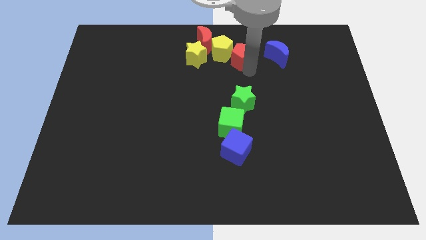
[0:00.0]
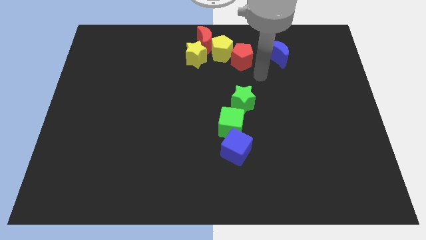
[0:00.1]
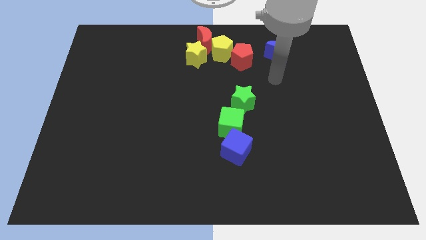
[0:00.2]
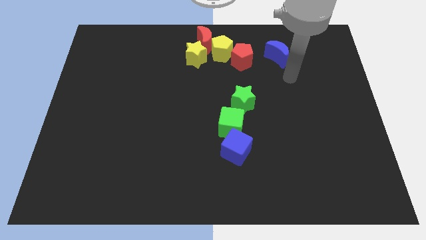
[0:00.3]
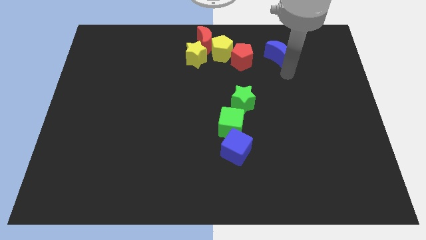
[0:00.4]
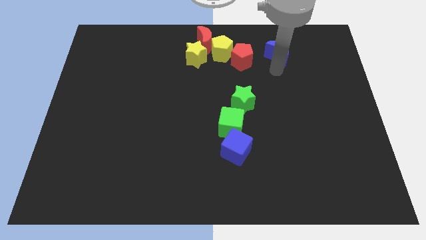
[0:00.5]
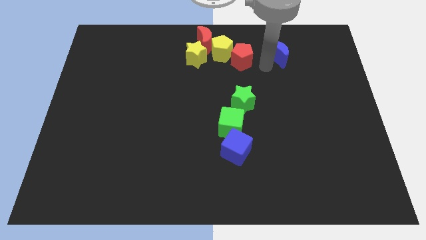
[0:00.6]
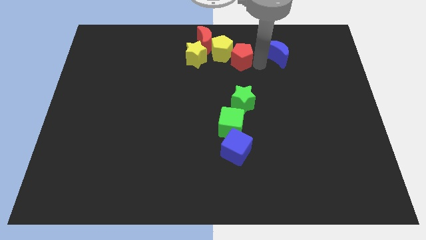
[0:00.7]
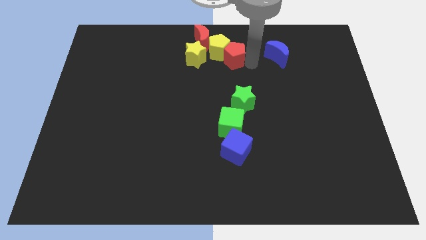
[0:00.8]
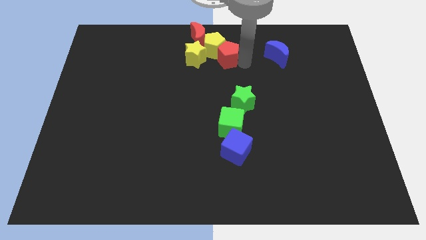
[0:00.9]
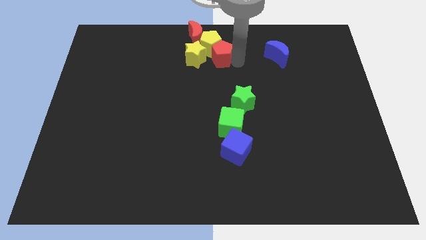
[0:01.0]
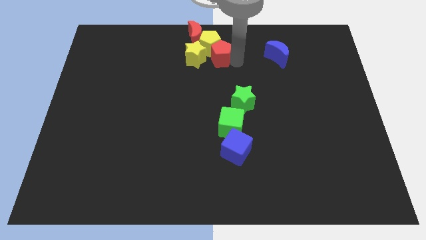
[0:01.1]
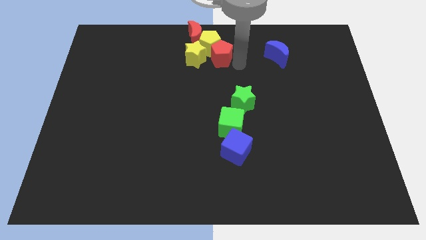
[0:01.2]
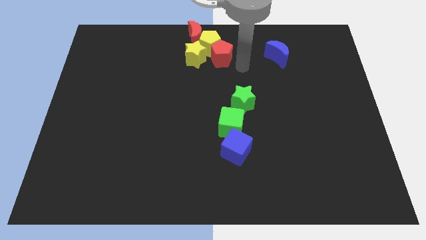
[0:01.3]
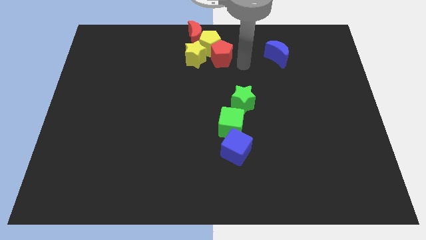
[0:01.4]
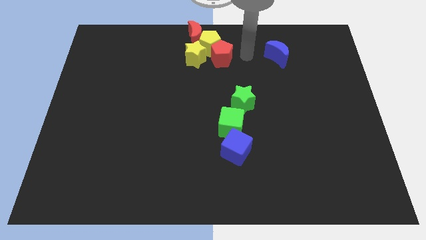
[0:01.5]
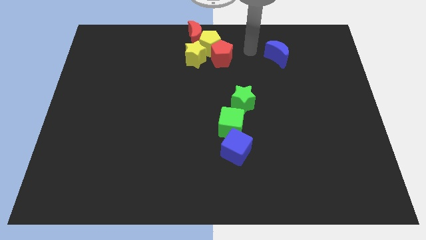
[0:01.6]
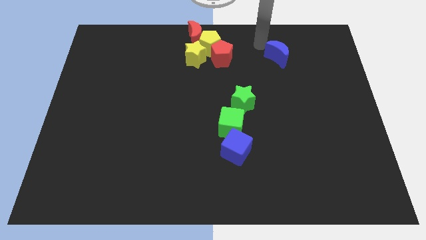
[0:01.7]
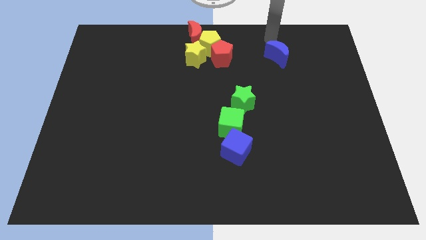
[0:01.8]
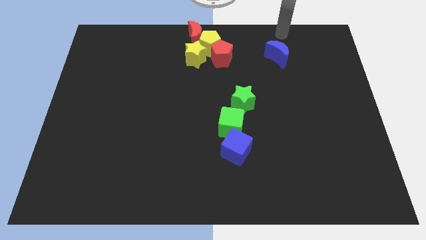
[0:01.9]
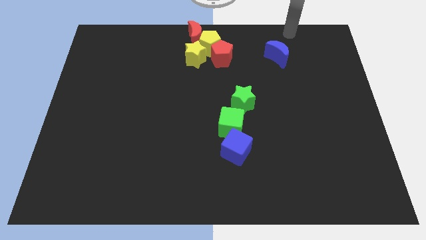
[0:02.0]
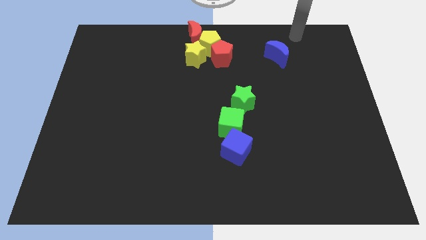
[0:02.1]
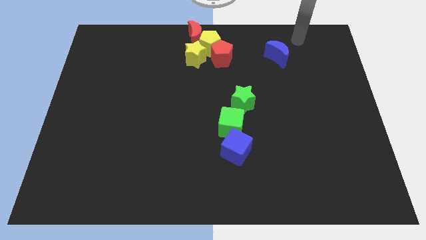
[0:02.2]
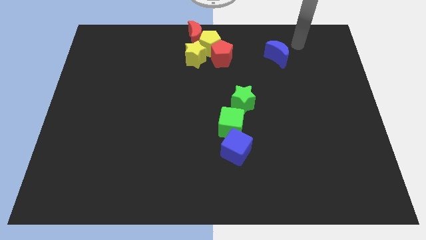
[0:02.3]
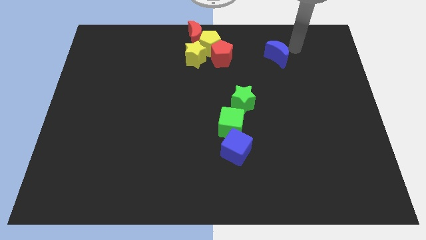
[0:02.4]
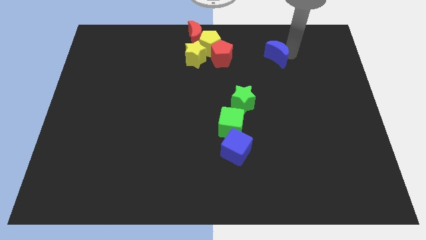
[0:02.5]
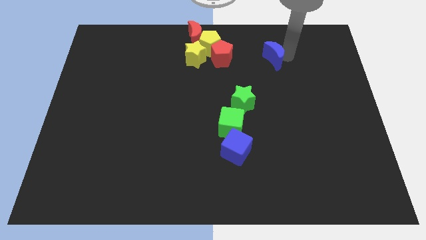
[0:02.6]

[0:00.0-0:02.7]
push a group of blocks to the left side of the board

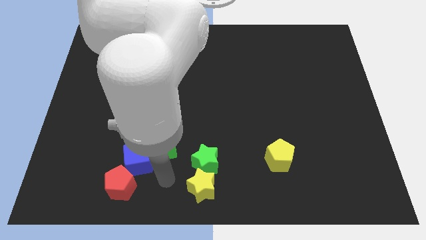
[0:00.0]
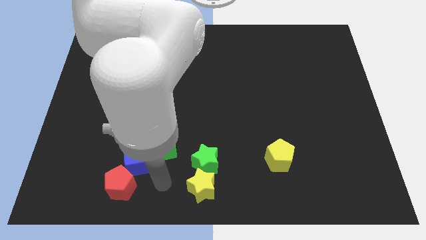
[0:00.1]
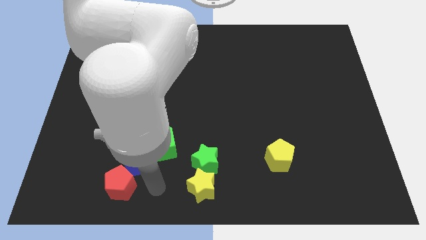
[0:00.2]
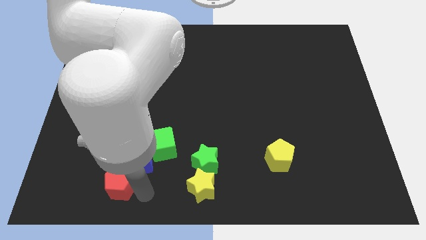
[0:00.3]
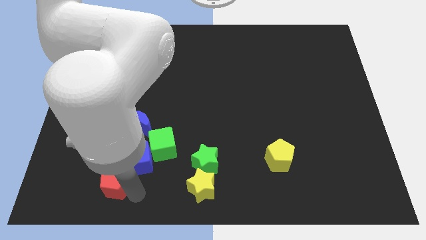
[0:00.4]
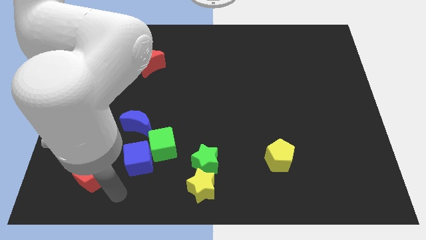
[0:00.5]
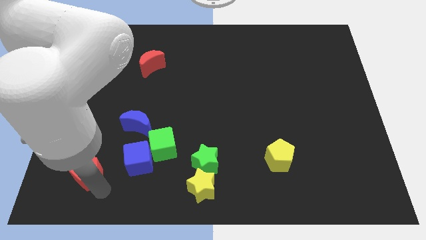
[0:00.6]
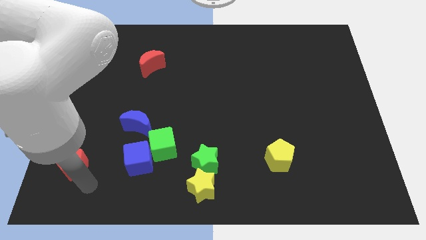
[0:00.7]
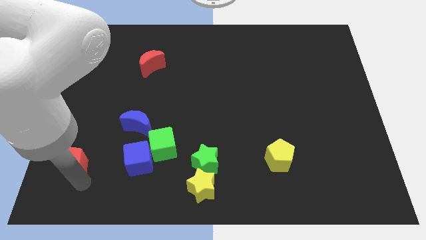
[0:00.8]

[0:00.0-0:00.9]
separate red pentagon from blue cube

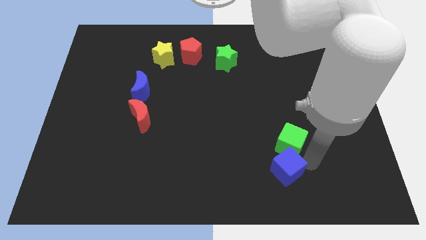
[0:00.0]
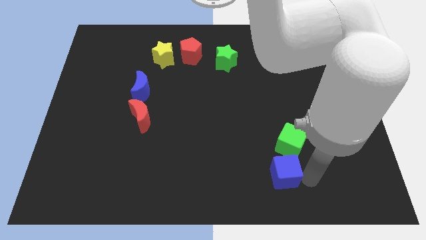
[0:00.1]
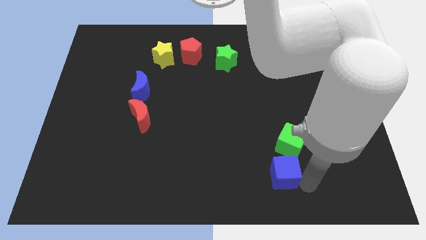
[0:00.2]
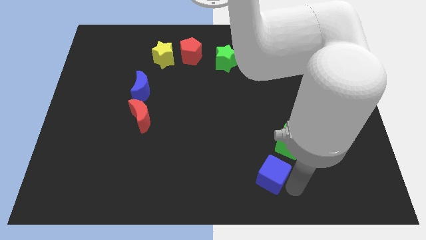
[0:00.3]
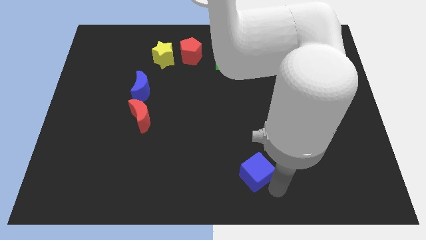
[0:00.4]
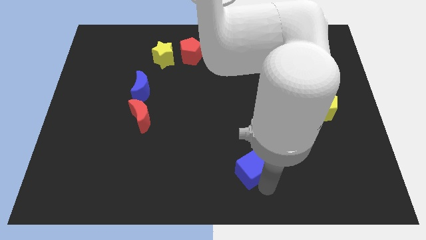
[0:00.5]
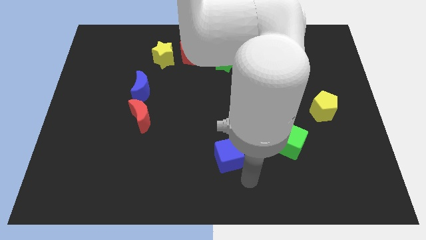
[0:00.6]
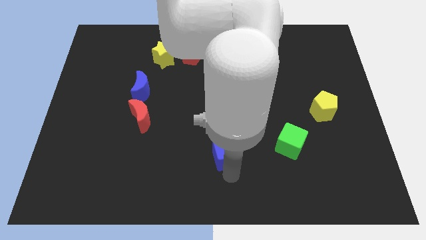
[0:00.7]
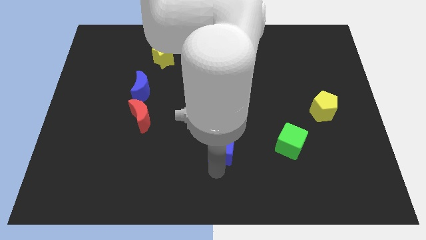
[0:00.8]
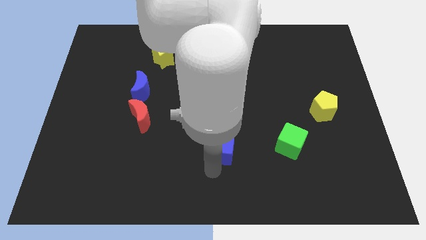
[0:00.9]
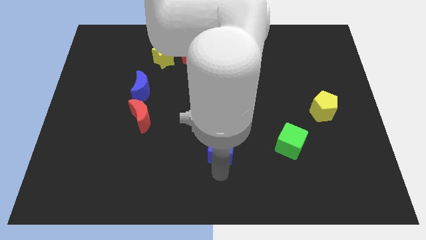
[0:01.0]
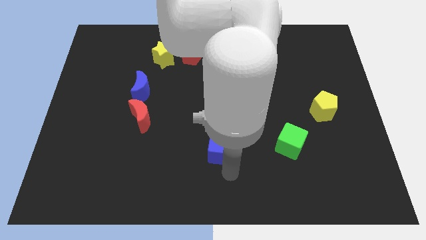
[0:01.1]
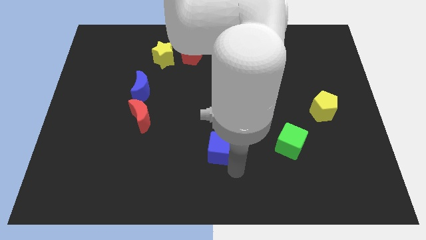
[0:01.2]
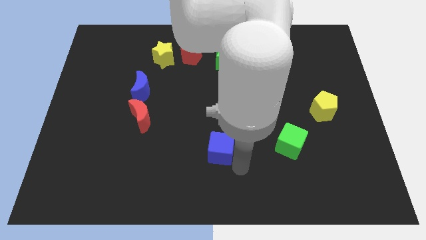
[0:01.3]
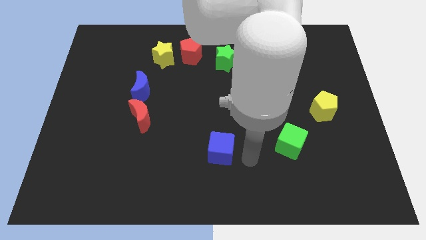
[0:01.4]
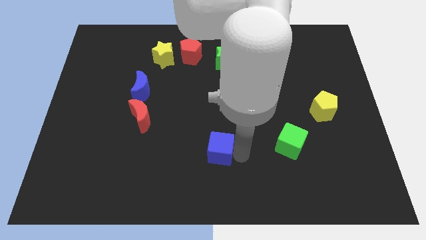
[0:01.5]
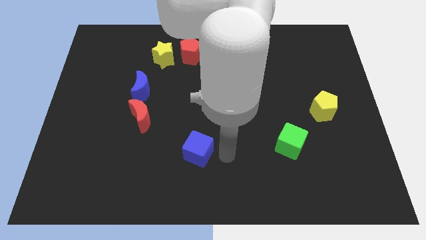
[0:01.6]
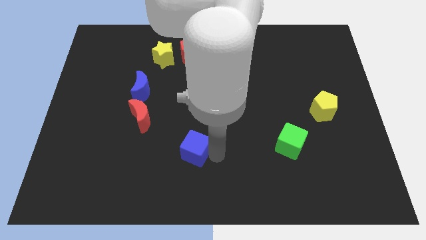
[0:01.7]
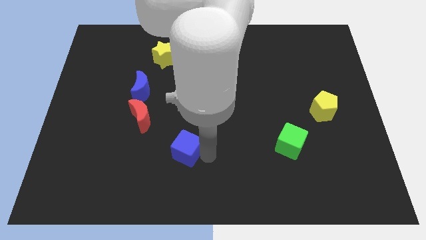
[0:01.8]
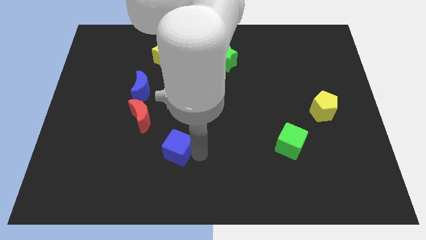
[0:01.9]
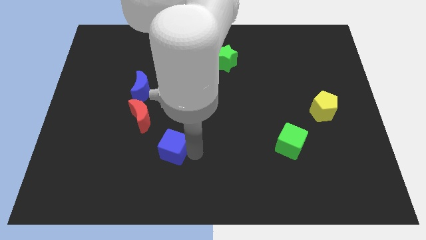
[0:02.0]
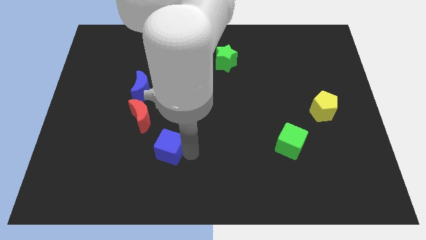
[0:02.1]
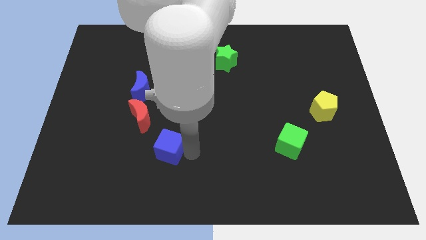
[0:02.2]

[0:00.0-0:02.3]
push blue cube towards the bottom of the red crescent

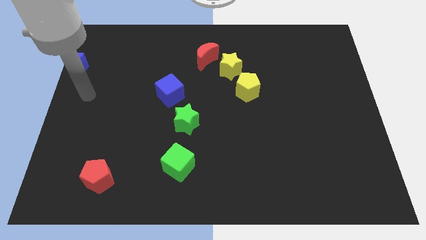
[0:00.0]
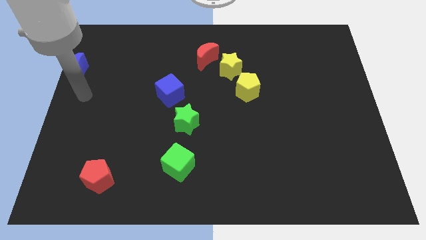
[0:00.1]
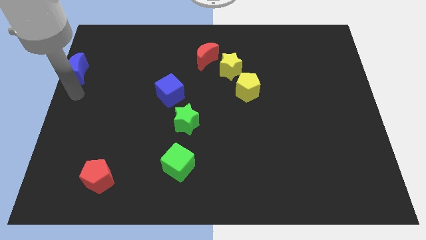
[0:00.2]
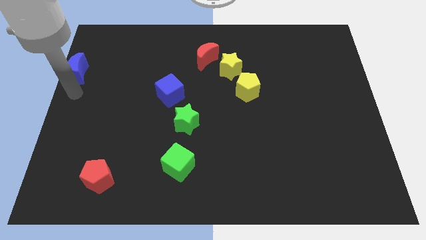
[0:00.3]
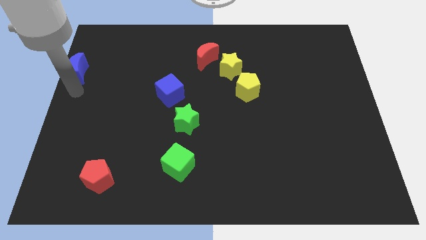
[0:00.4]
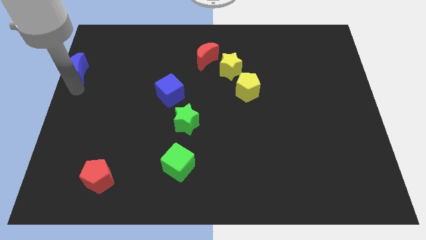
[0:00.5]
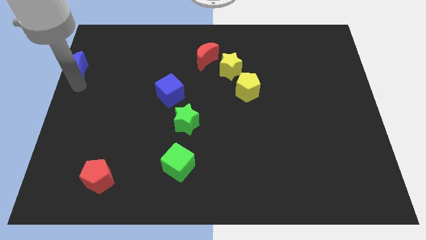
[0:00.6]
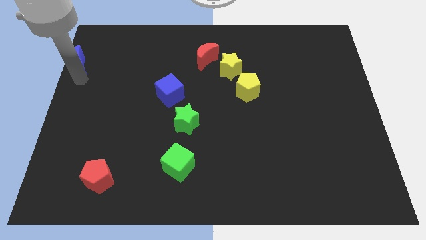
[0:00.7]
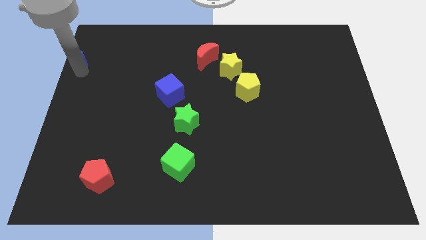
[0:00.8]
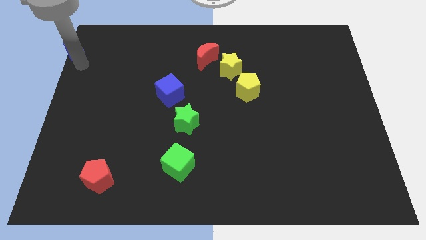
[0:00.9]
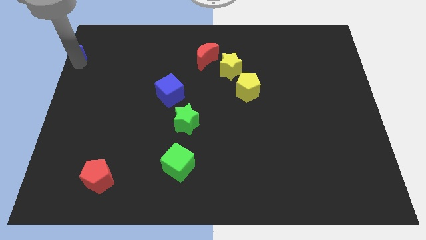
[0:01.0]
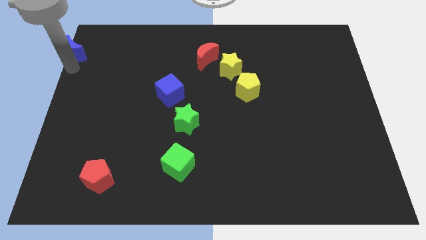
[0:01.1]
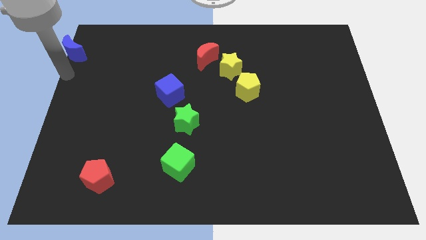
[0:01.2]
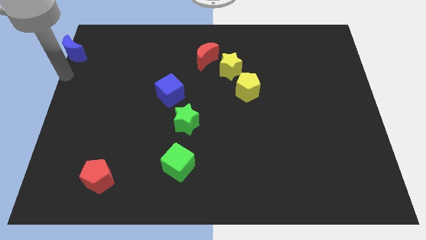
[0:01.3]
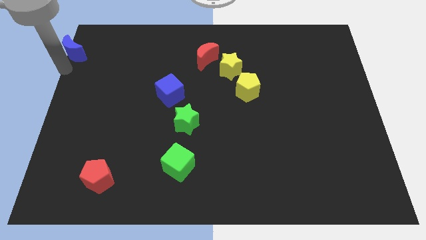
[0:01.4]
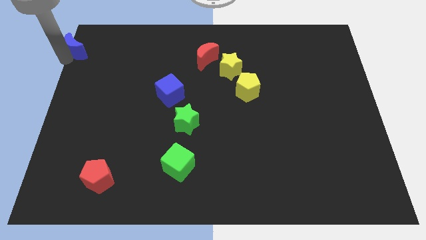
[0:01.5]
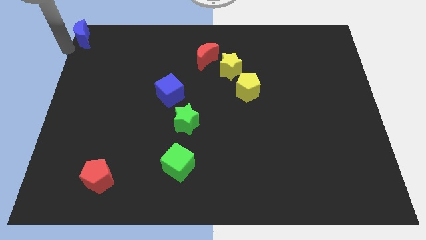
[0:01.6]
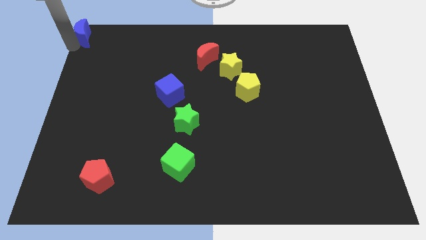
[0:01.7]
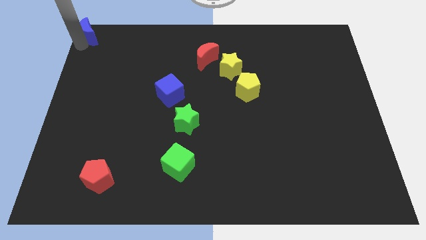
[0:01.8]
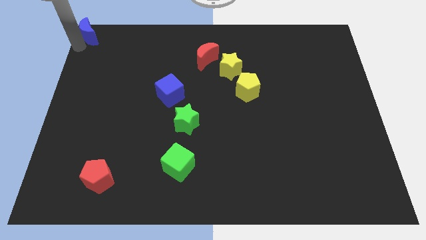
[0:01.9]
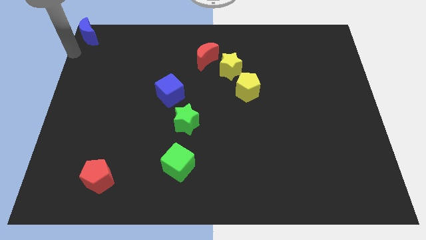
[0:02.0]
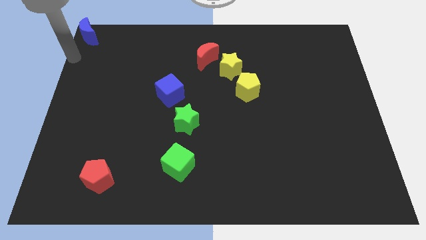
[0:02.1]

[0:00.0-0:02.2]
place the blue crescent at the top left corner of the board

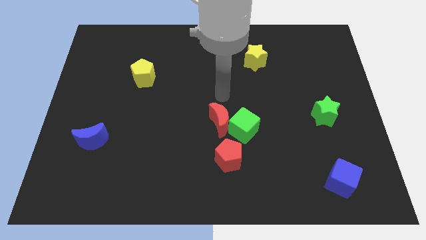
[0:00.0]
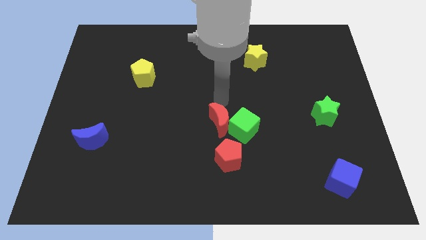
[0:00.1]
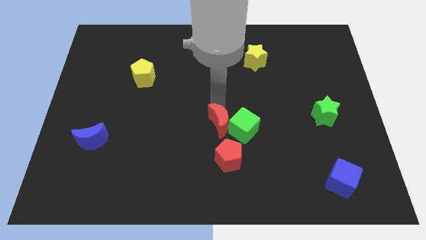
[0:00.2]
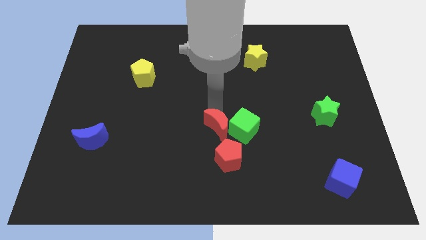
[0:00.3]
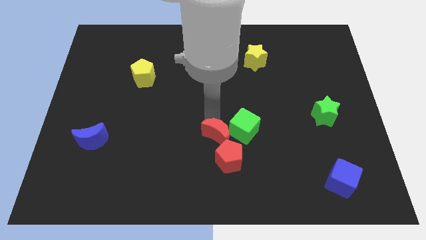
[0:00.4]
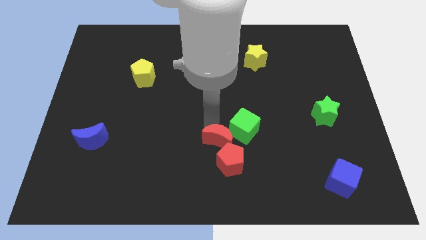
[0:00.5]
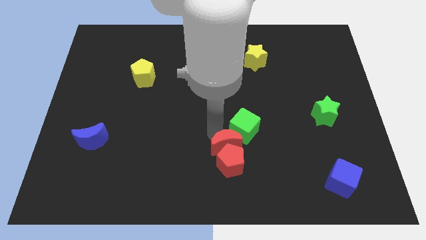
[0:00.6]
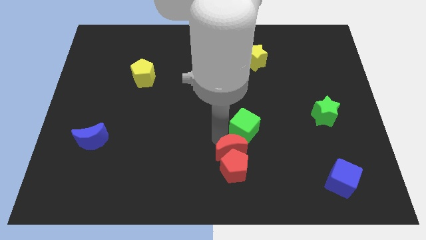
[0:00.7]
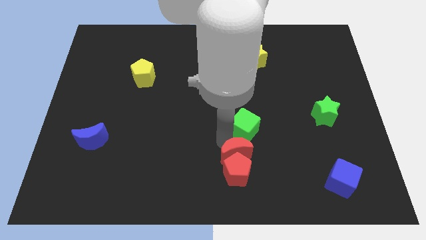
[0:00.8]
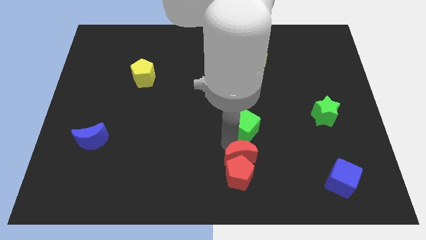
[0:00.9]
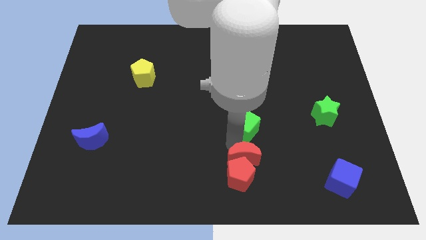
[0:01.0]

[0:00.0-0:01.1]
push the red moon and red pentagon downward
